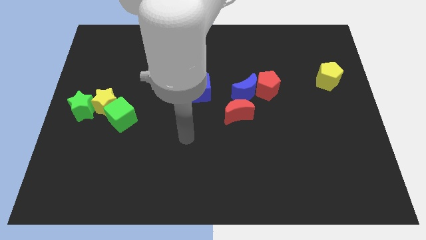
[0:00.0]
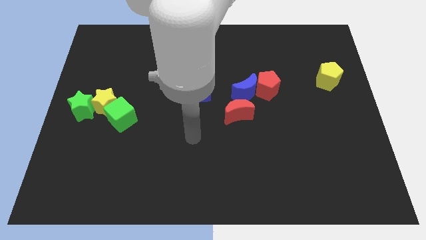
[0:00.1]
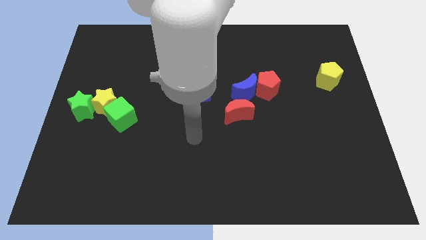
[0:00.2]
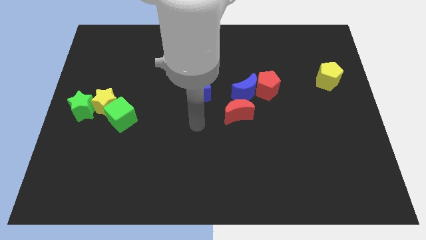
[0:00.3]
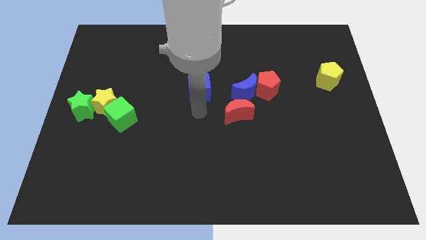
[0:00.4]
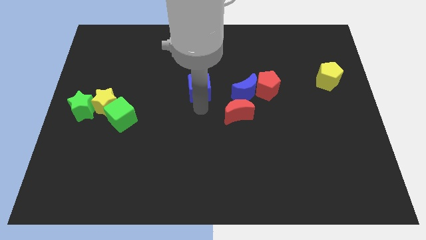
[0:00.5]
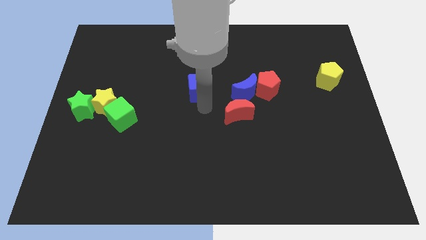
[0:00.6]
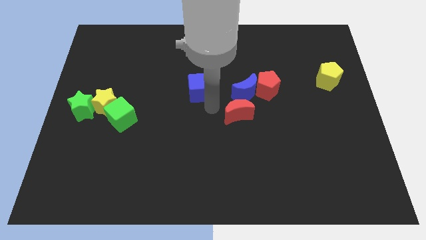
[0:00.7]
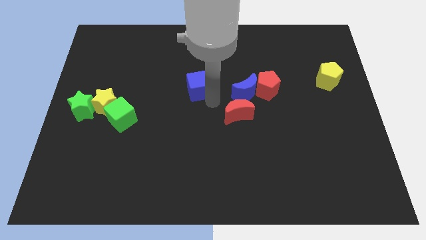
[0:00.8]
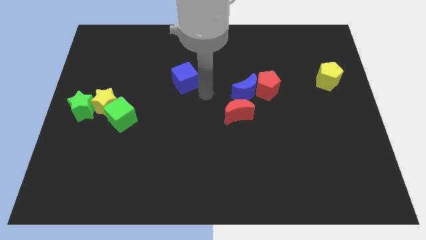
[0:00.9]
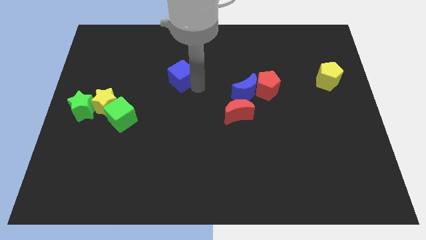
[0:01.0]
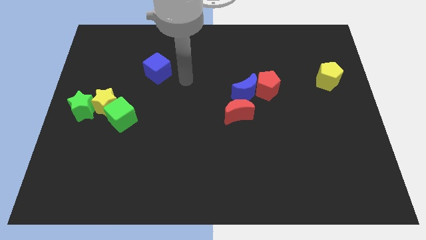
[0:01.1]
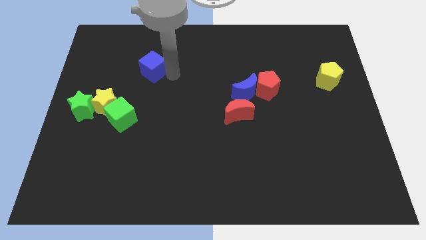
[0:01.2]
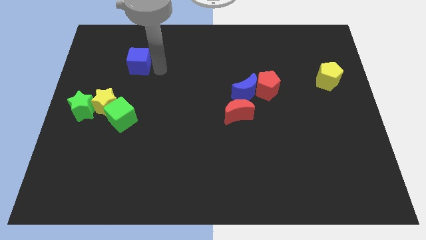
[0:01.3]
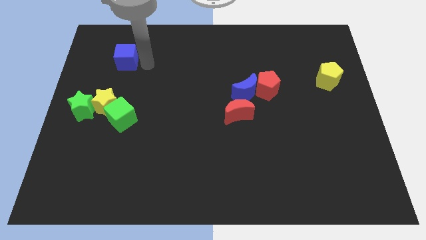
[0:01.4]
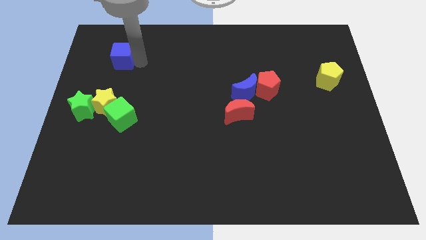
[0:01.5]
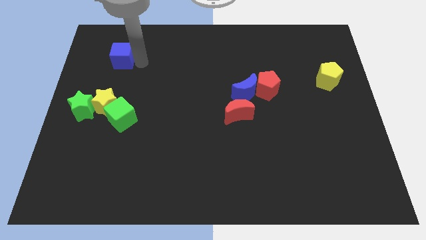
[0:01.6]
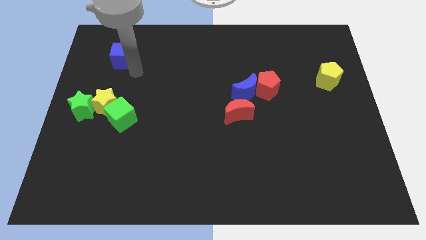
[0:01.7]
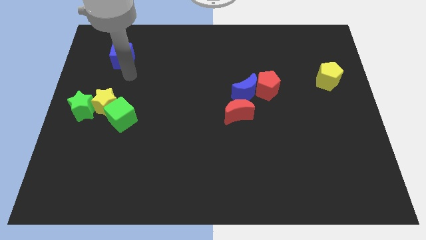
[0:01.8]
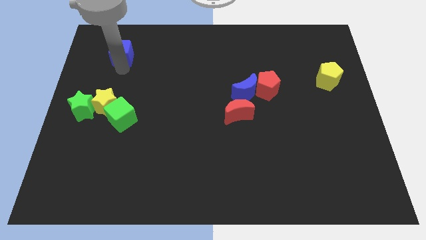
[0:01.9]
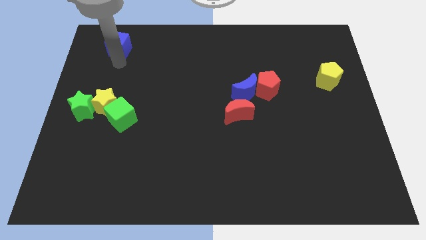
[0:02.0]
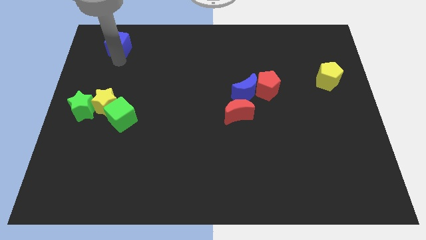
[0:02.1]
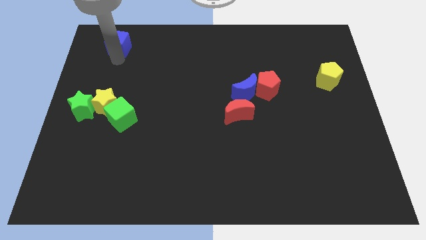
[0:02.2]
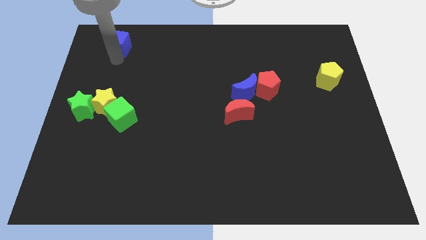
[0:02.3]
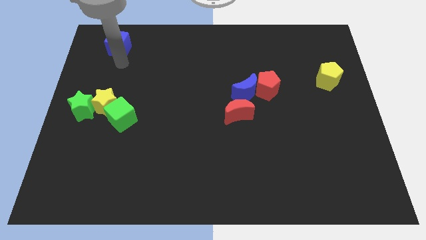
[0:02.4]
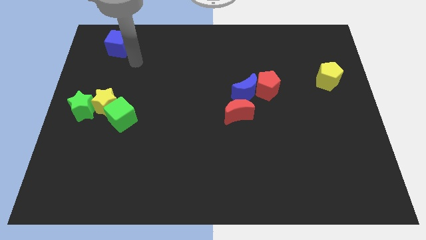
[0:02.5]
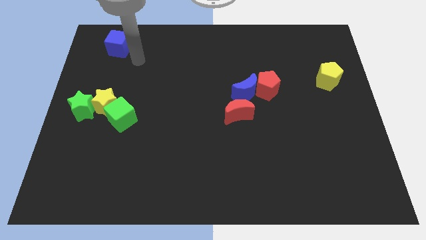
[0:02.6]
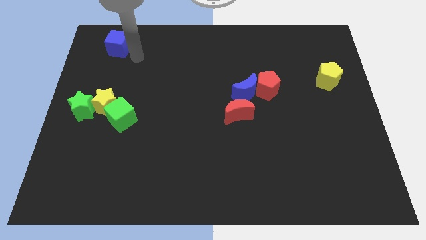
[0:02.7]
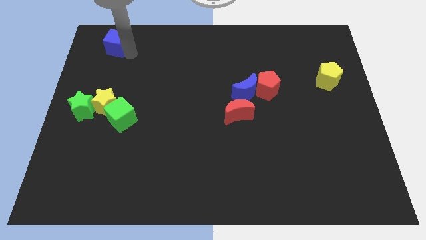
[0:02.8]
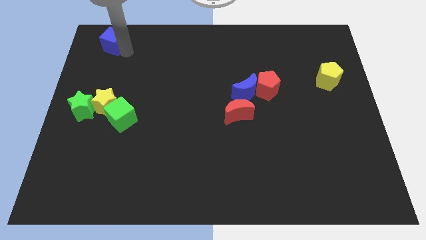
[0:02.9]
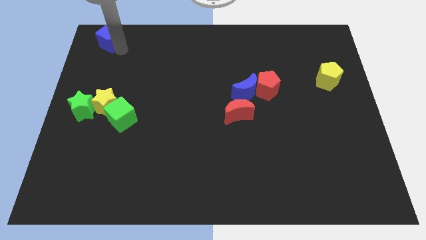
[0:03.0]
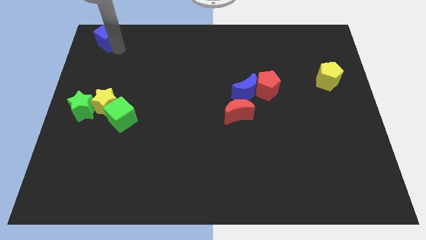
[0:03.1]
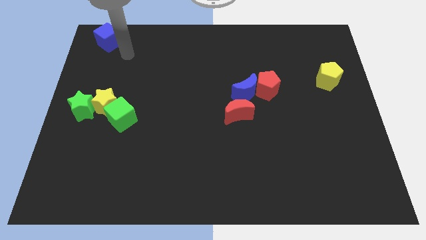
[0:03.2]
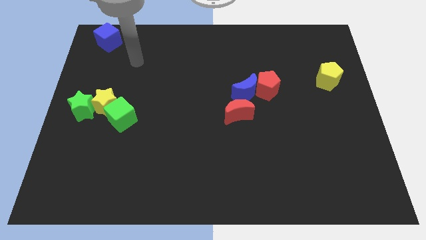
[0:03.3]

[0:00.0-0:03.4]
place the blue cube to the top left of the board

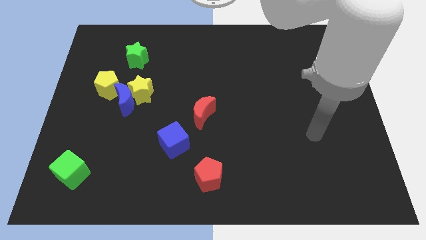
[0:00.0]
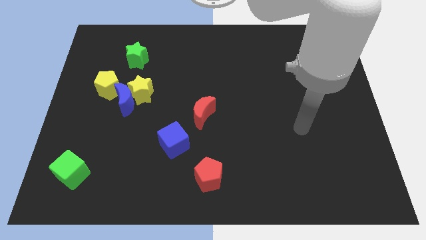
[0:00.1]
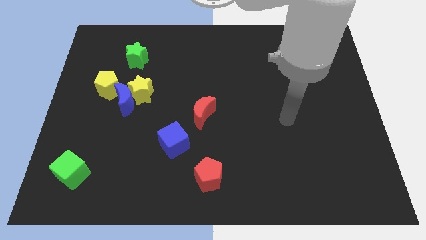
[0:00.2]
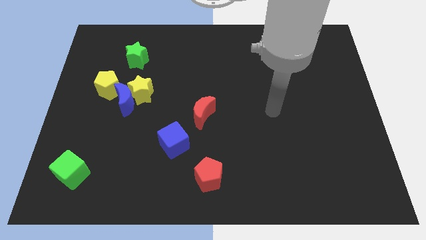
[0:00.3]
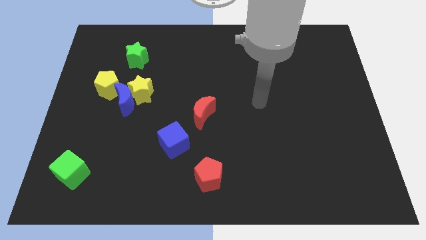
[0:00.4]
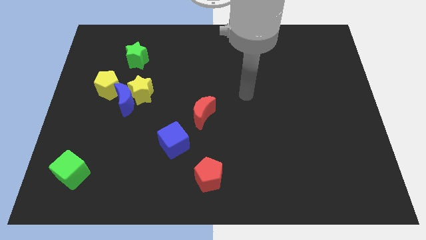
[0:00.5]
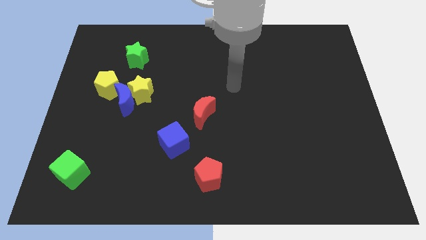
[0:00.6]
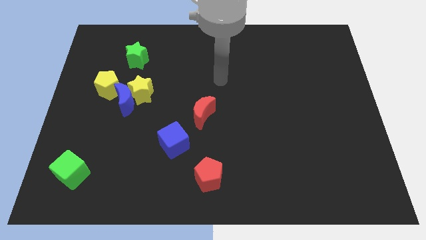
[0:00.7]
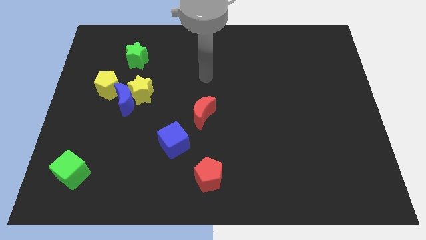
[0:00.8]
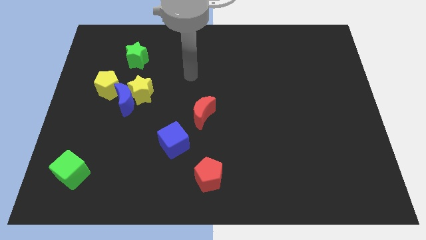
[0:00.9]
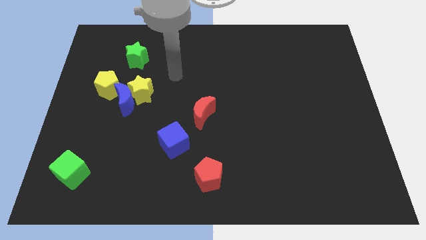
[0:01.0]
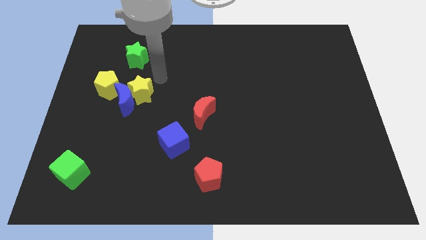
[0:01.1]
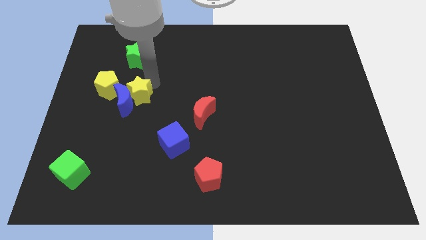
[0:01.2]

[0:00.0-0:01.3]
move your arm close to the yellow star

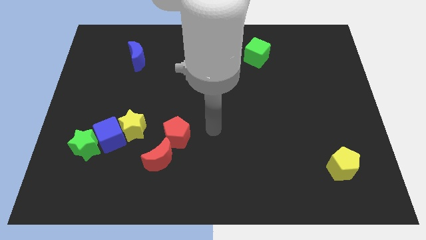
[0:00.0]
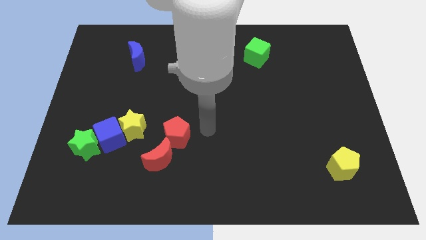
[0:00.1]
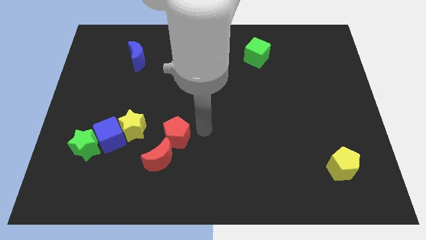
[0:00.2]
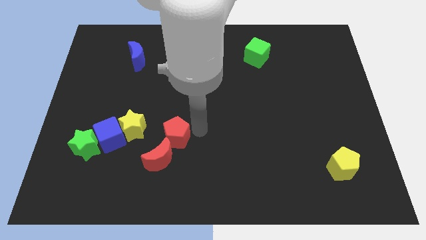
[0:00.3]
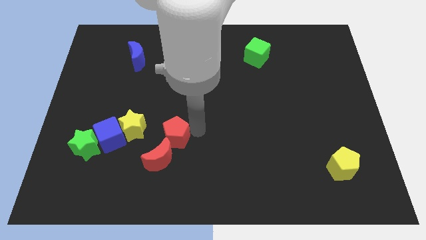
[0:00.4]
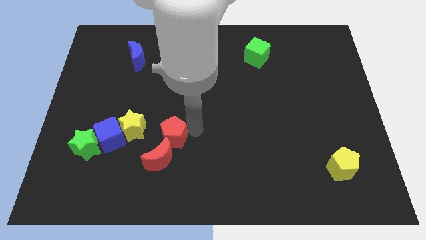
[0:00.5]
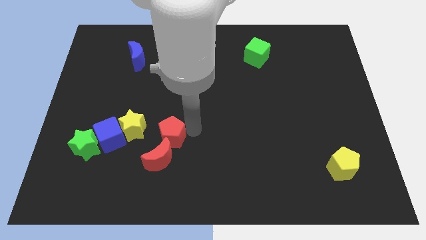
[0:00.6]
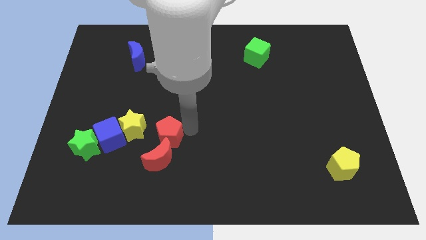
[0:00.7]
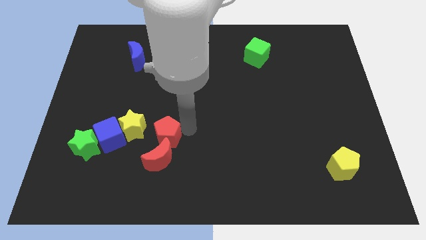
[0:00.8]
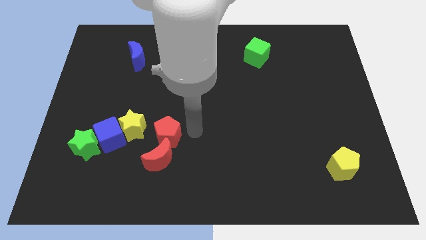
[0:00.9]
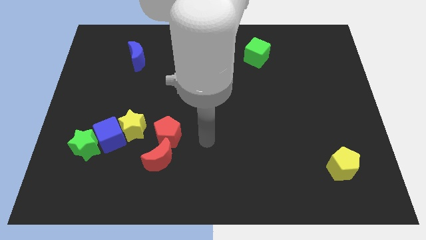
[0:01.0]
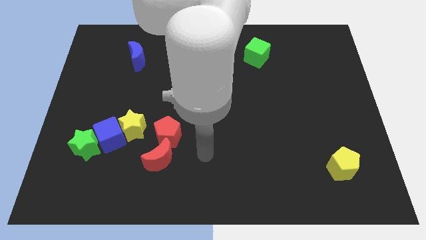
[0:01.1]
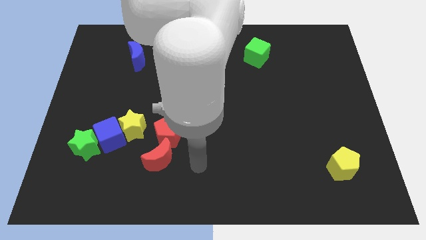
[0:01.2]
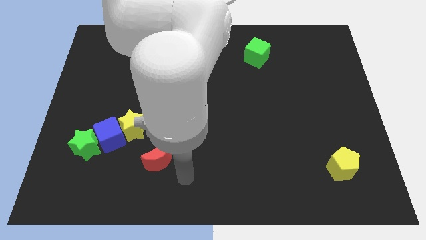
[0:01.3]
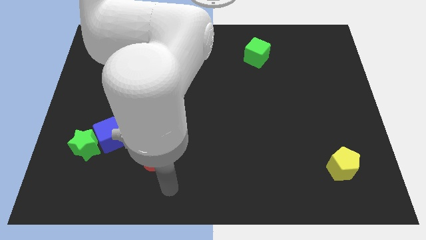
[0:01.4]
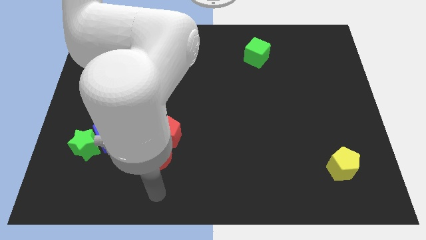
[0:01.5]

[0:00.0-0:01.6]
adjust the red pentagon to the top of the red moon

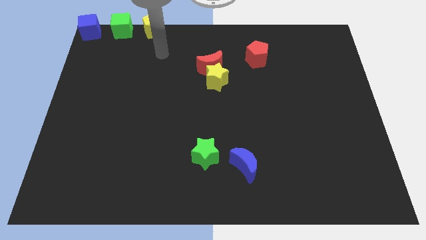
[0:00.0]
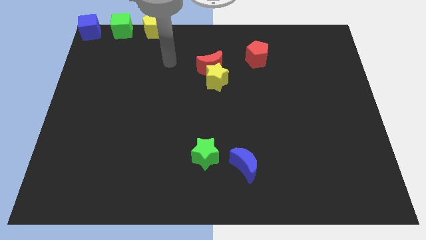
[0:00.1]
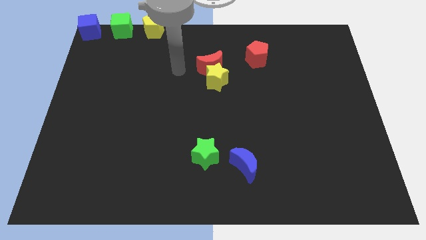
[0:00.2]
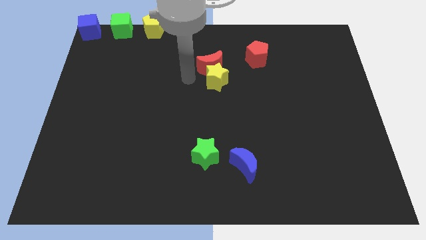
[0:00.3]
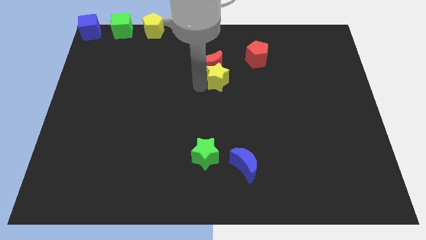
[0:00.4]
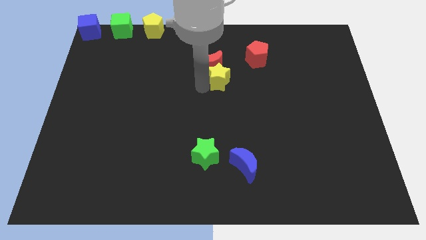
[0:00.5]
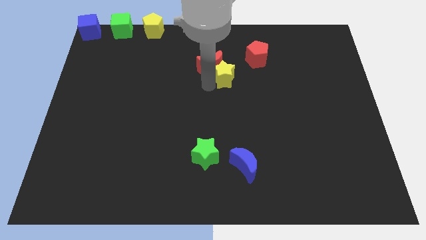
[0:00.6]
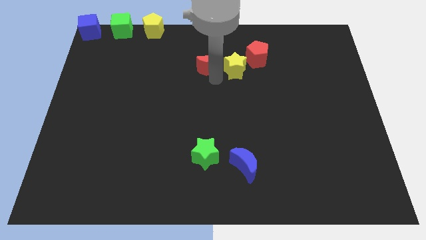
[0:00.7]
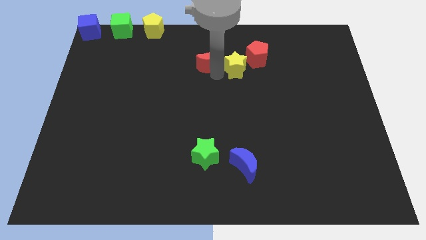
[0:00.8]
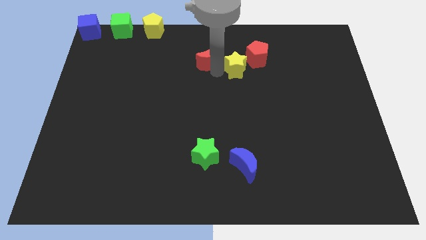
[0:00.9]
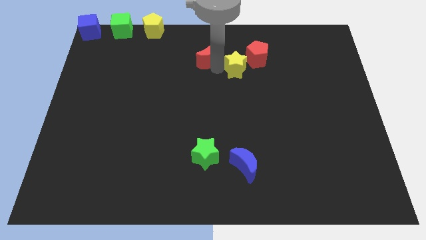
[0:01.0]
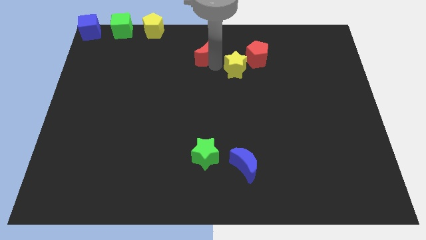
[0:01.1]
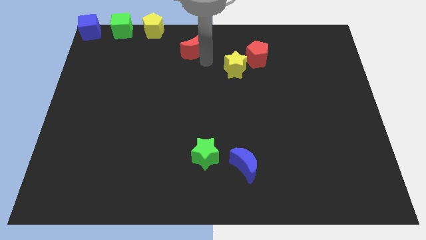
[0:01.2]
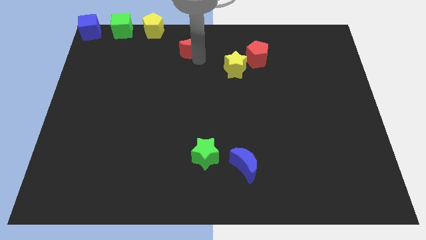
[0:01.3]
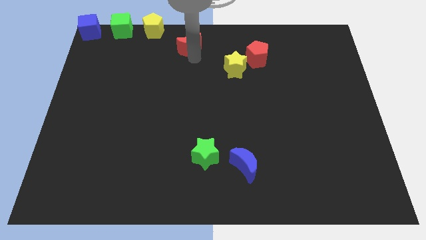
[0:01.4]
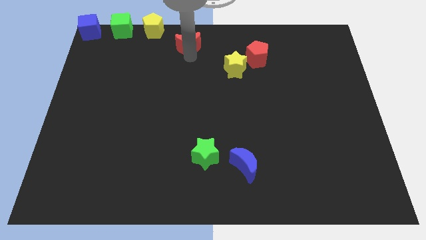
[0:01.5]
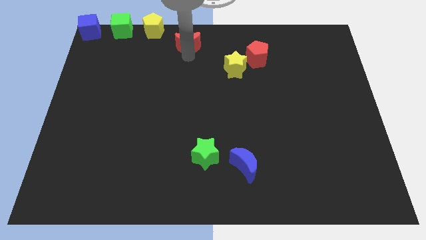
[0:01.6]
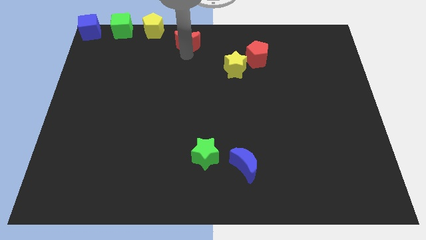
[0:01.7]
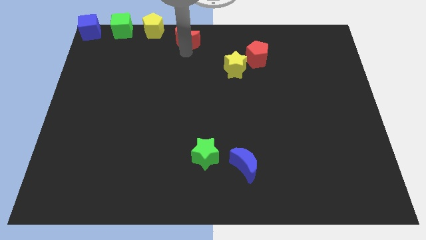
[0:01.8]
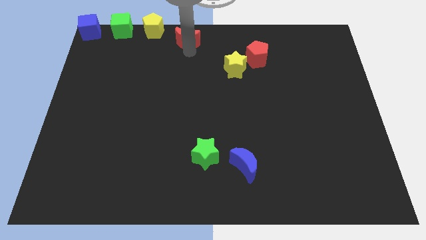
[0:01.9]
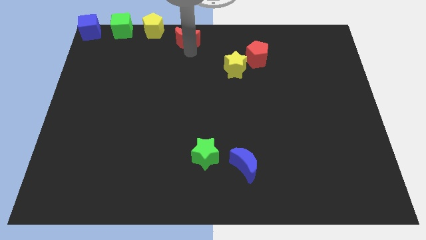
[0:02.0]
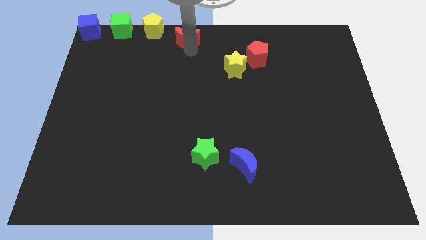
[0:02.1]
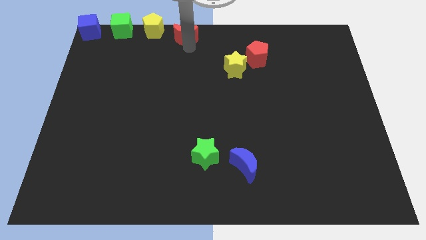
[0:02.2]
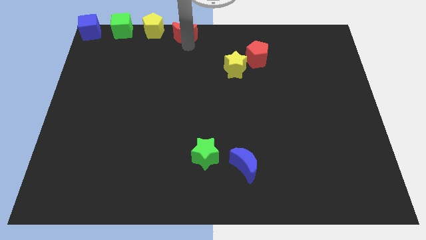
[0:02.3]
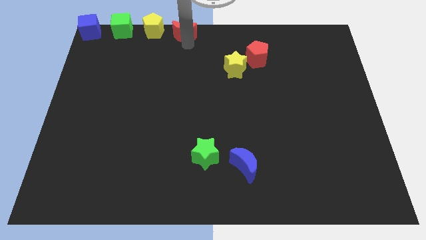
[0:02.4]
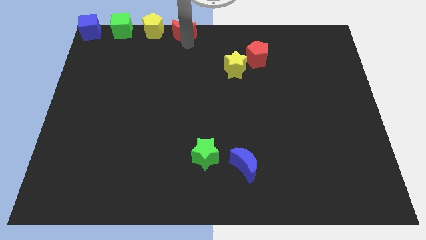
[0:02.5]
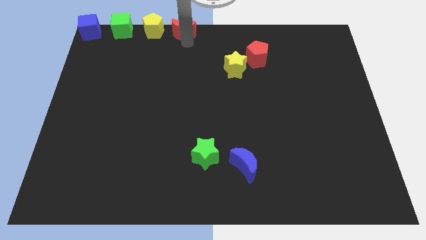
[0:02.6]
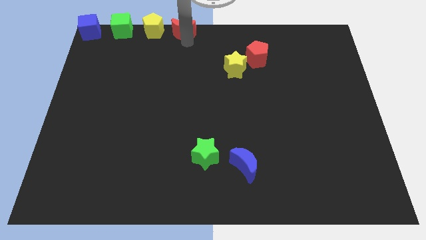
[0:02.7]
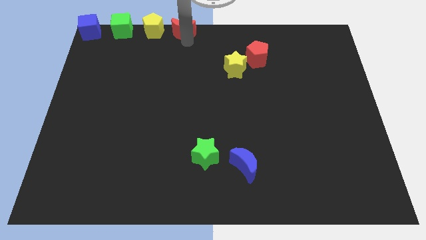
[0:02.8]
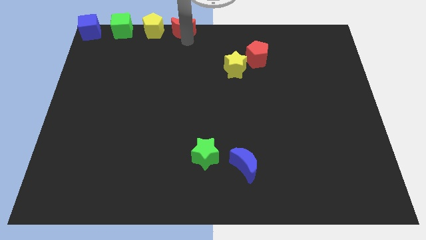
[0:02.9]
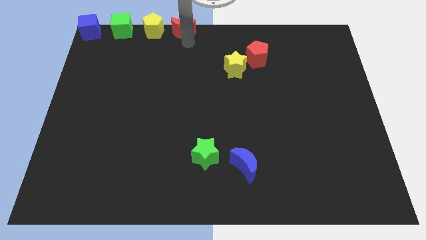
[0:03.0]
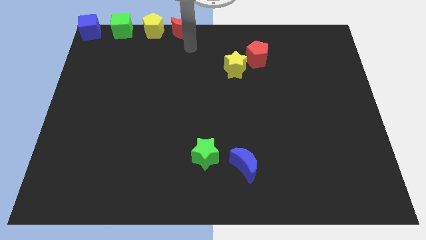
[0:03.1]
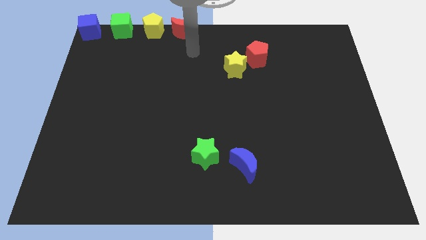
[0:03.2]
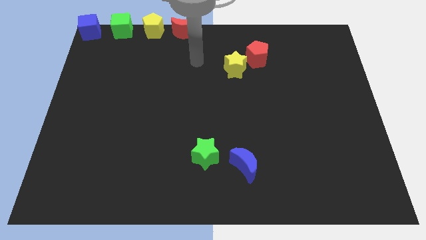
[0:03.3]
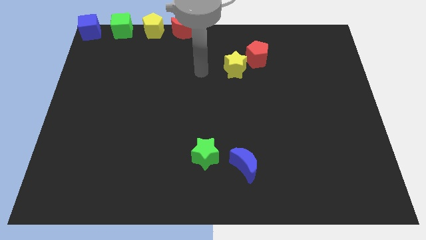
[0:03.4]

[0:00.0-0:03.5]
move the red crescent to the right of the yellow pentagon
